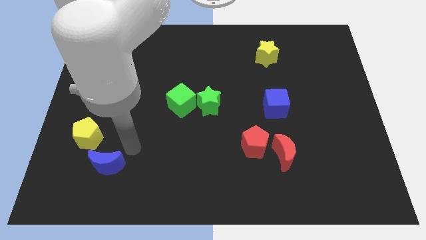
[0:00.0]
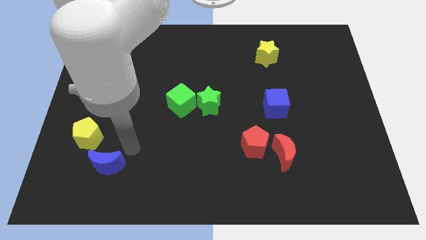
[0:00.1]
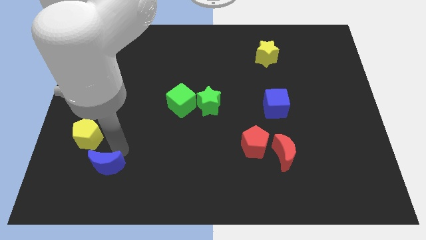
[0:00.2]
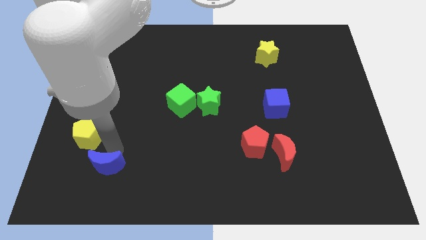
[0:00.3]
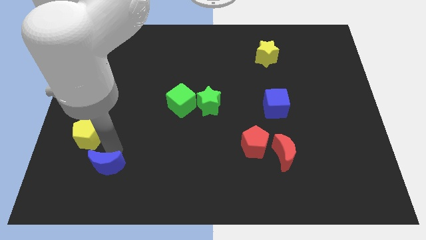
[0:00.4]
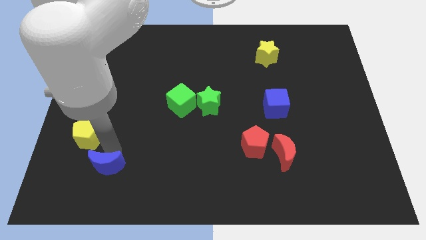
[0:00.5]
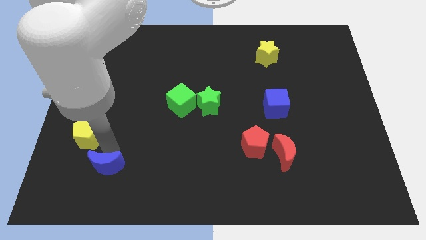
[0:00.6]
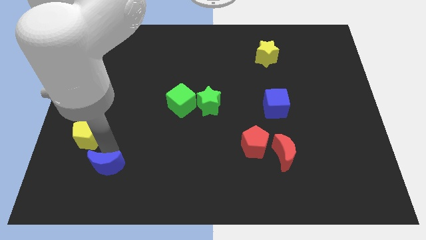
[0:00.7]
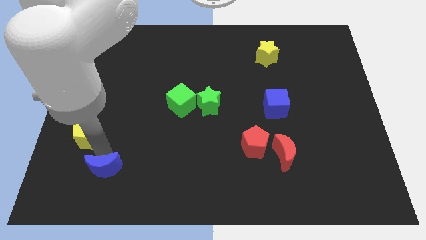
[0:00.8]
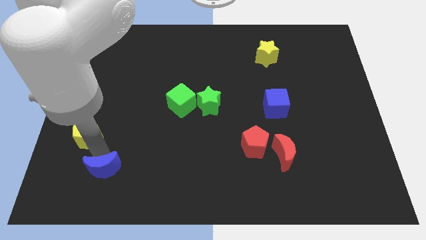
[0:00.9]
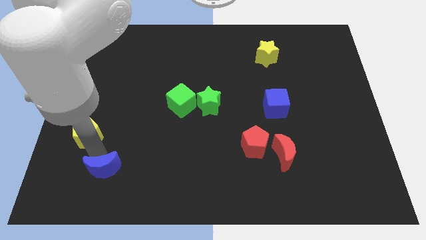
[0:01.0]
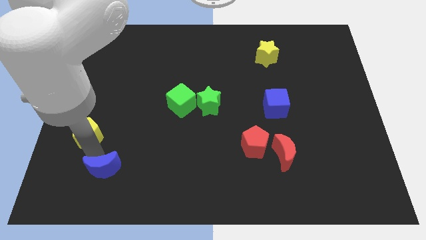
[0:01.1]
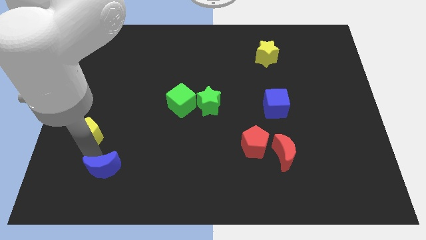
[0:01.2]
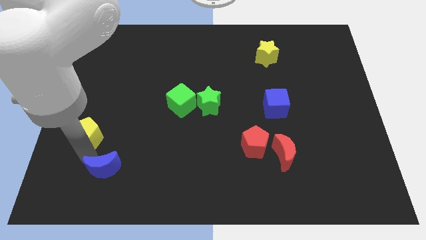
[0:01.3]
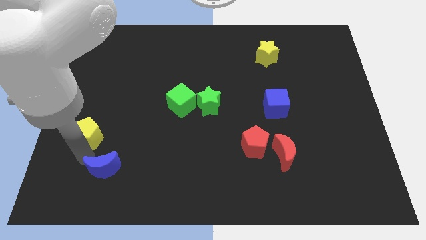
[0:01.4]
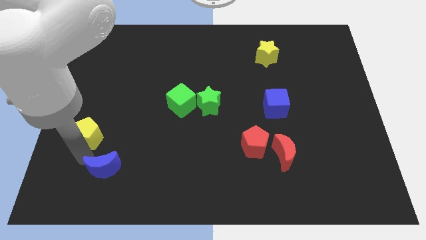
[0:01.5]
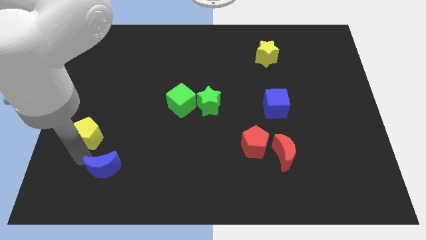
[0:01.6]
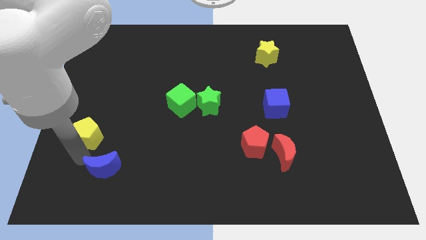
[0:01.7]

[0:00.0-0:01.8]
slightly move the blue crescent

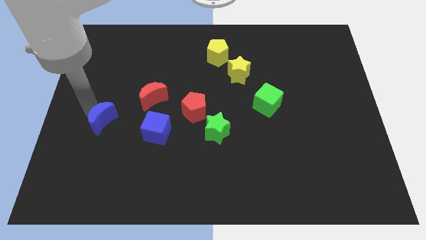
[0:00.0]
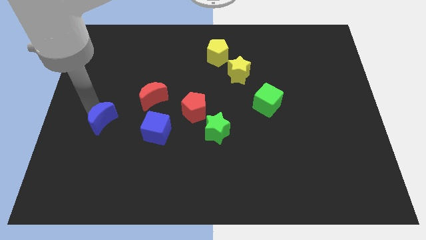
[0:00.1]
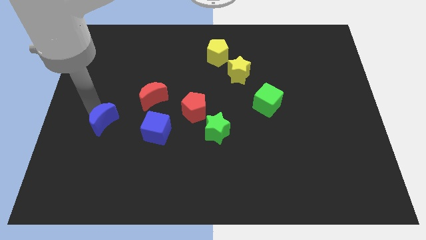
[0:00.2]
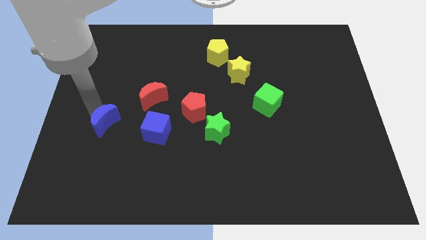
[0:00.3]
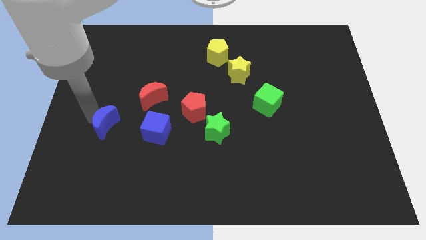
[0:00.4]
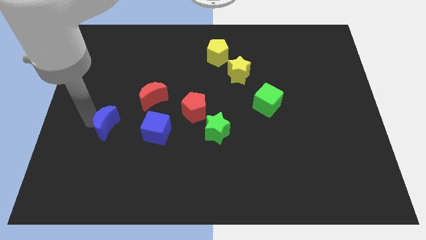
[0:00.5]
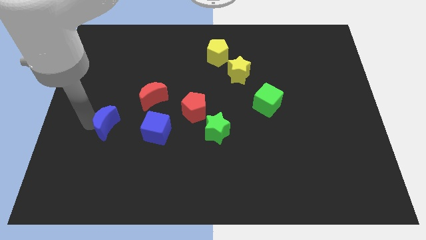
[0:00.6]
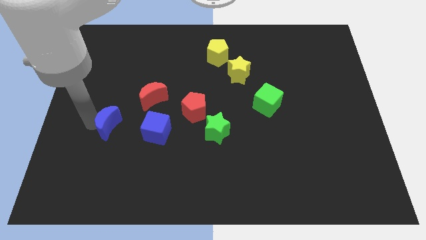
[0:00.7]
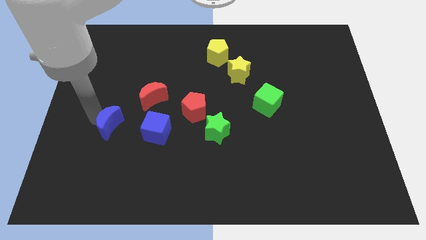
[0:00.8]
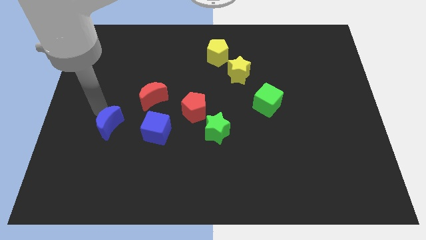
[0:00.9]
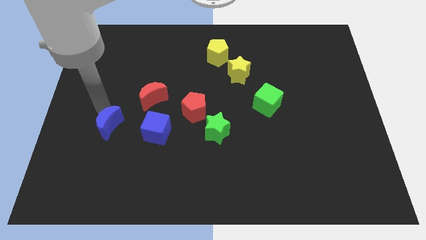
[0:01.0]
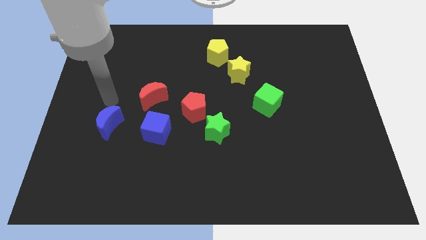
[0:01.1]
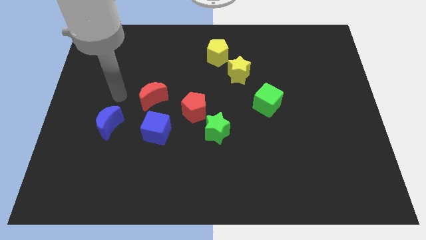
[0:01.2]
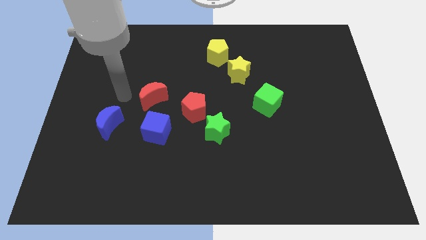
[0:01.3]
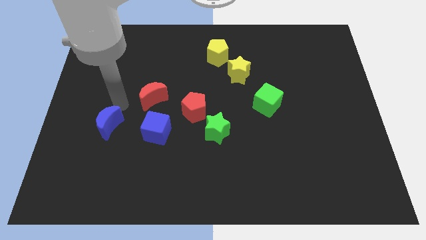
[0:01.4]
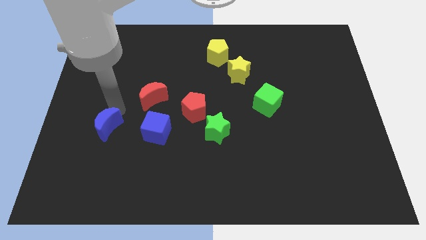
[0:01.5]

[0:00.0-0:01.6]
place the blue crescent to the left side of the blue cube

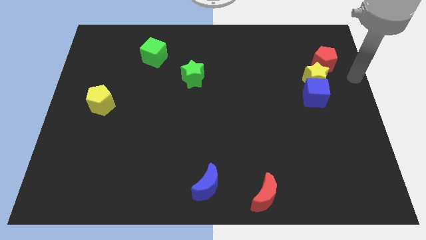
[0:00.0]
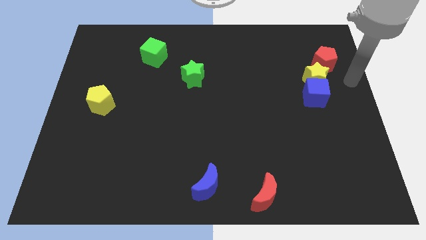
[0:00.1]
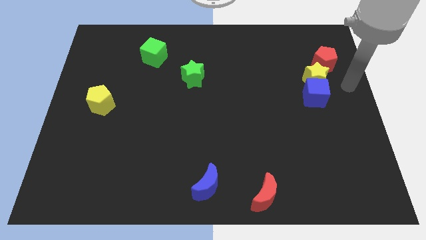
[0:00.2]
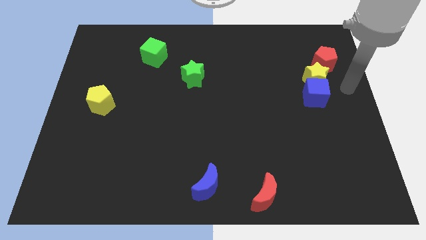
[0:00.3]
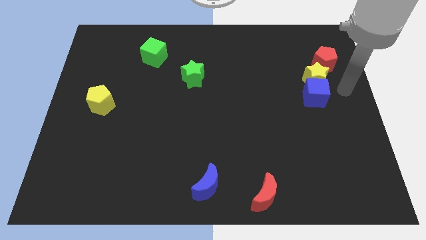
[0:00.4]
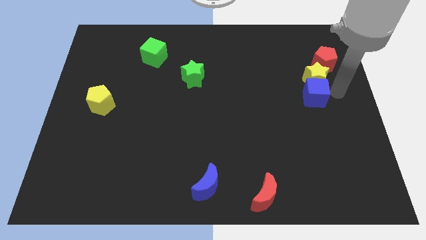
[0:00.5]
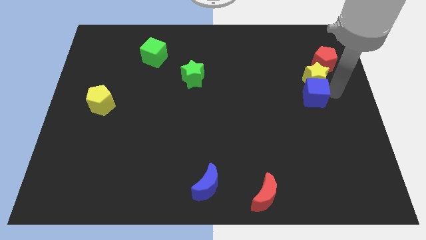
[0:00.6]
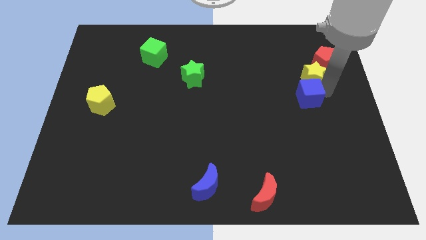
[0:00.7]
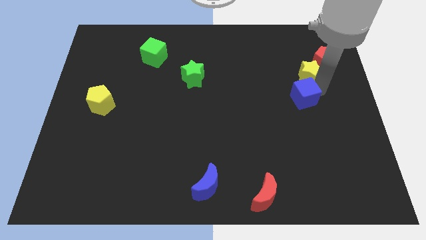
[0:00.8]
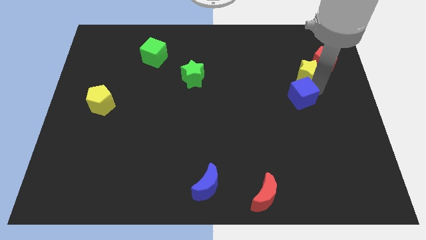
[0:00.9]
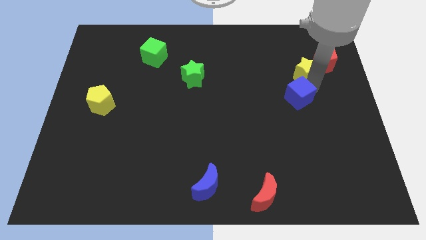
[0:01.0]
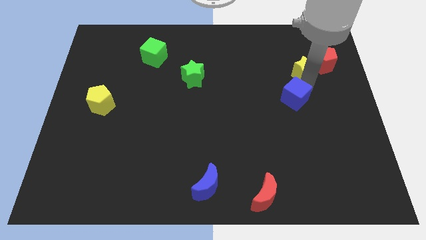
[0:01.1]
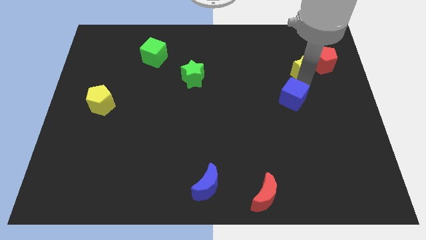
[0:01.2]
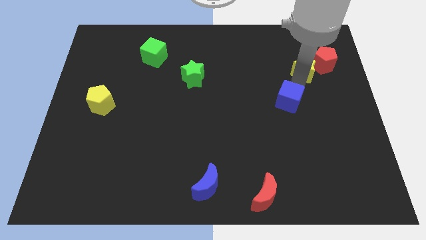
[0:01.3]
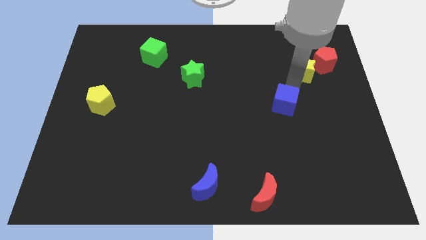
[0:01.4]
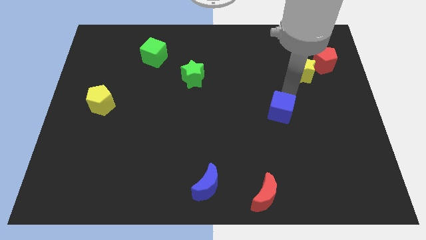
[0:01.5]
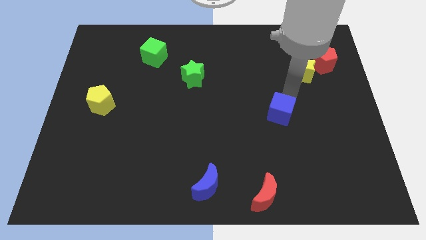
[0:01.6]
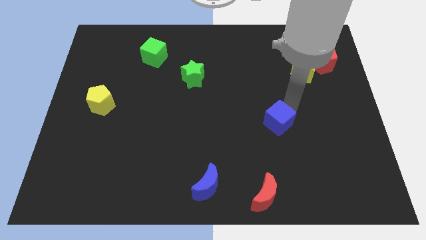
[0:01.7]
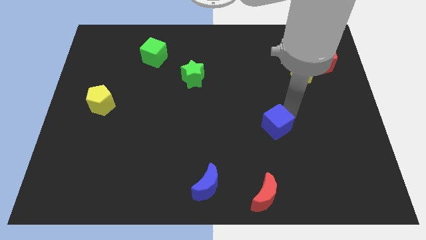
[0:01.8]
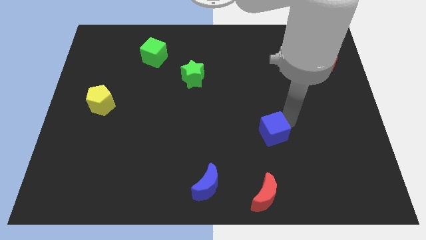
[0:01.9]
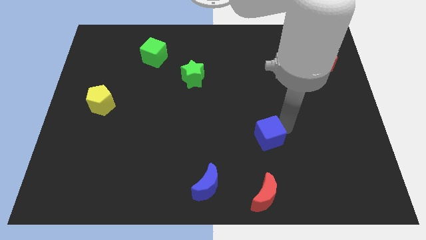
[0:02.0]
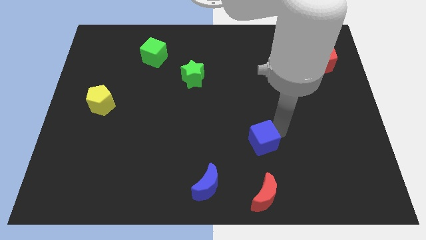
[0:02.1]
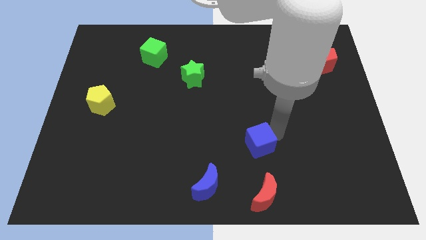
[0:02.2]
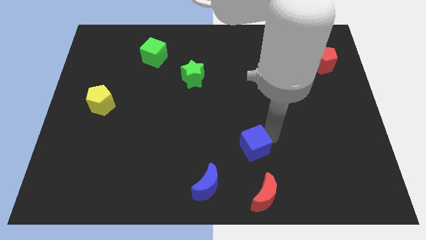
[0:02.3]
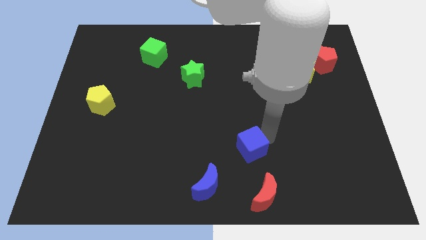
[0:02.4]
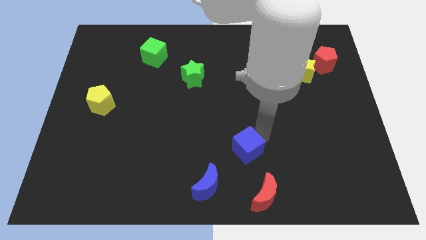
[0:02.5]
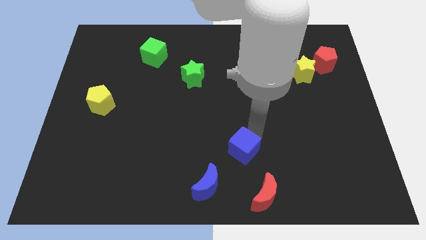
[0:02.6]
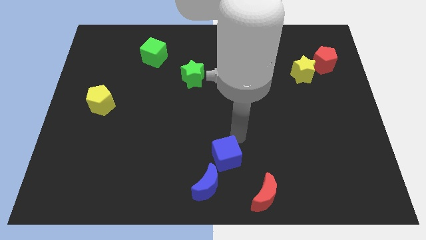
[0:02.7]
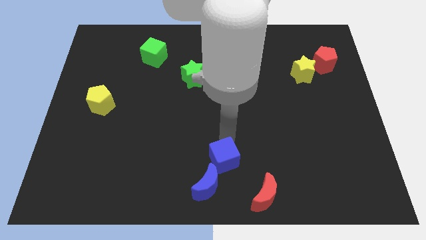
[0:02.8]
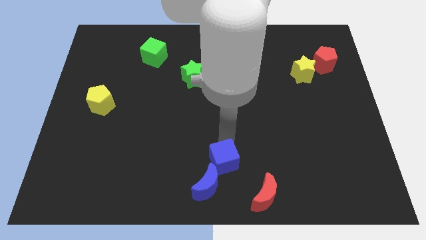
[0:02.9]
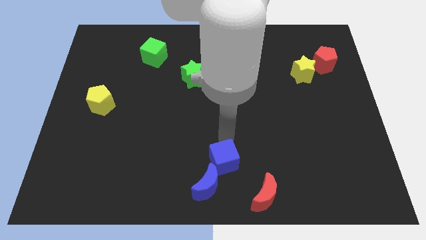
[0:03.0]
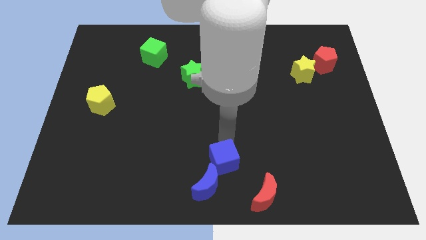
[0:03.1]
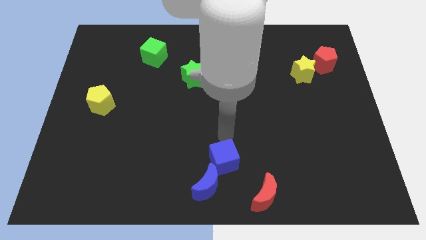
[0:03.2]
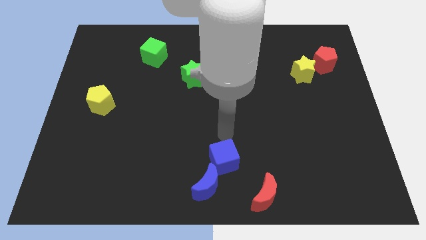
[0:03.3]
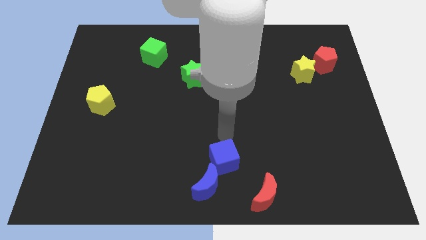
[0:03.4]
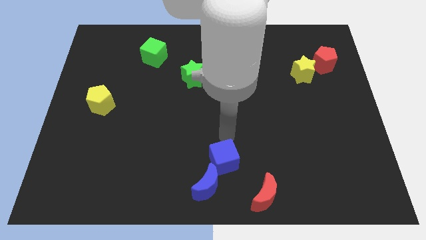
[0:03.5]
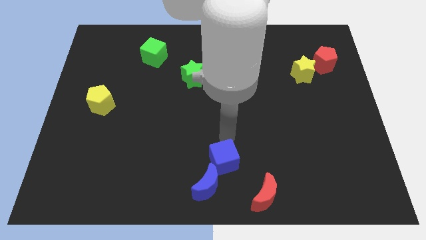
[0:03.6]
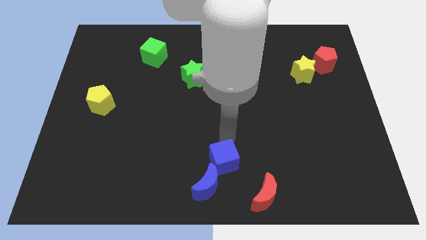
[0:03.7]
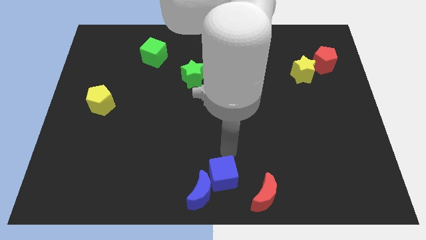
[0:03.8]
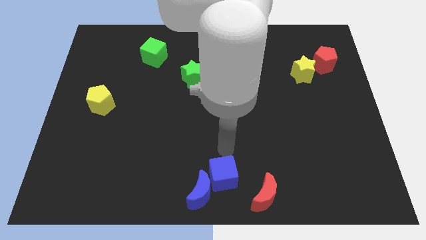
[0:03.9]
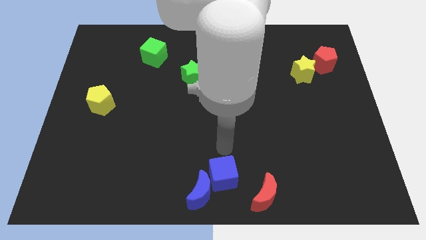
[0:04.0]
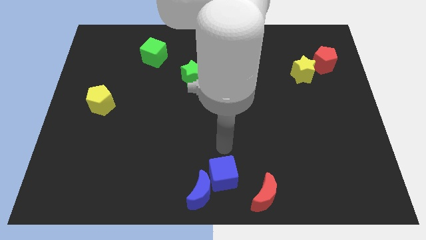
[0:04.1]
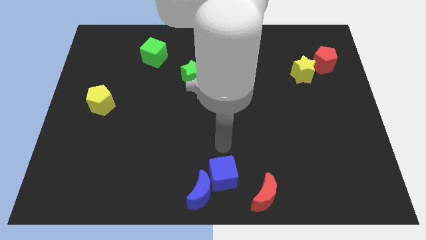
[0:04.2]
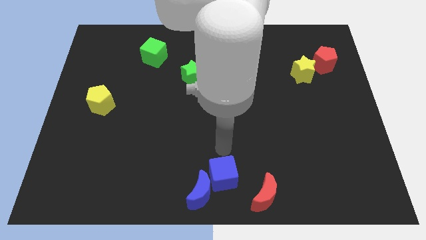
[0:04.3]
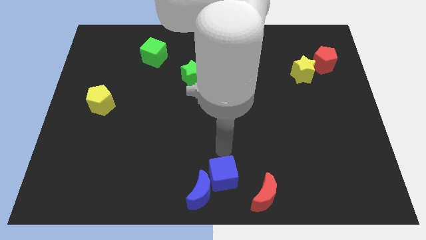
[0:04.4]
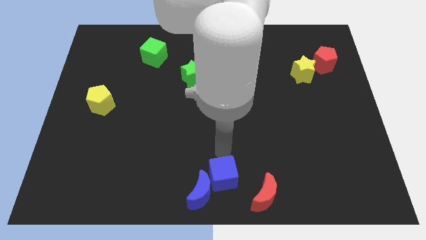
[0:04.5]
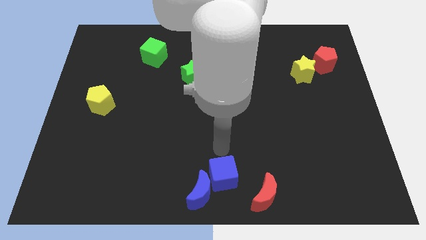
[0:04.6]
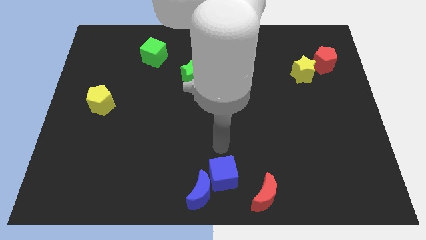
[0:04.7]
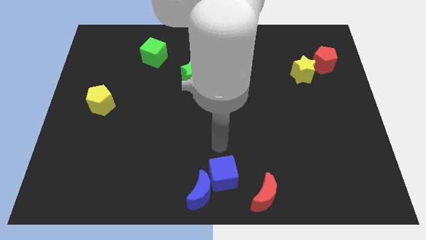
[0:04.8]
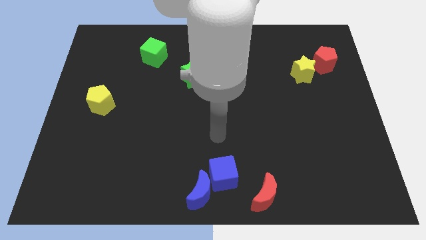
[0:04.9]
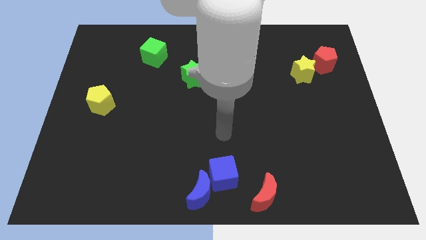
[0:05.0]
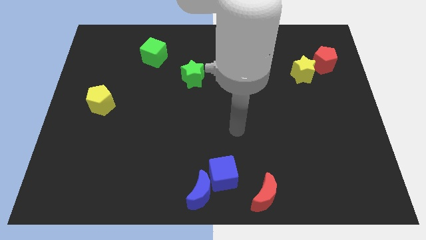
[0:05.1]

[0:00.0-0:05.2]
push the blue cube into blue moon

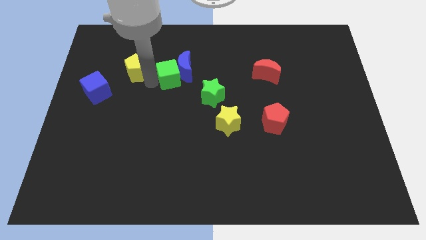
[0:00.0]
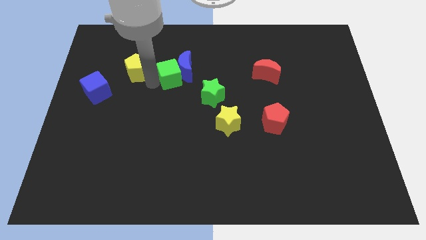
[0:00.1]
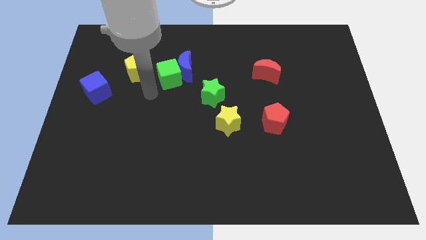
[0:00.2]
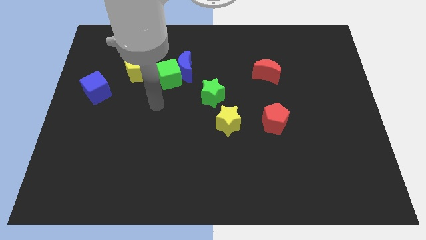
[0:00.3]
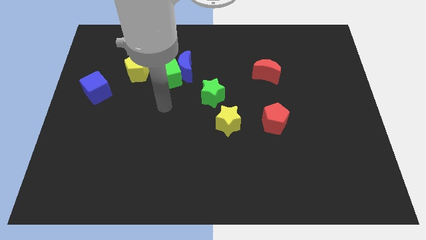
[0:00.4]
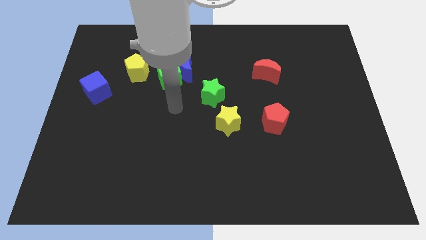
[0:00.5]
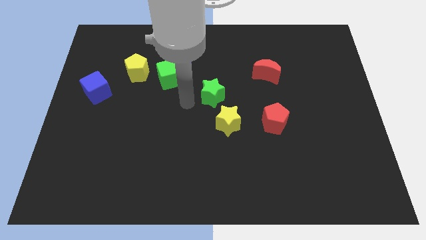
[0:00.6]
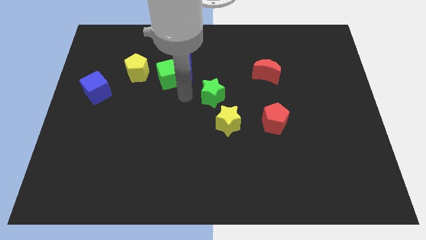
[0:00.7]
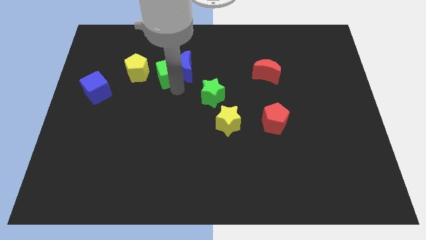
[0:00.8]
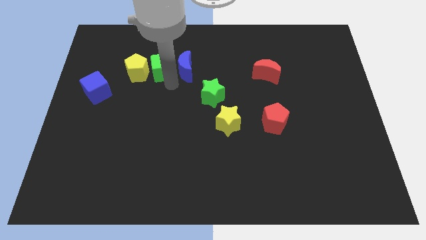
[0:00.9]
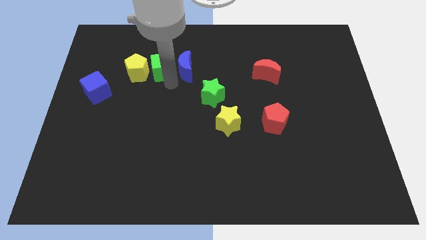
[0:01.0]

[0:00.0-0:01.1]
place the green cube in between the yellow pentagon and blue crescent
